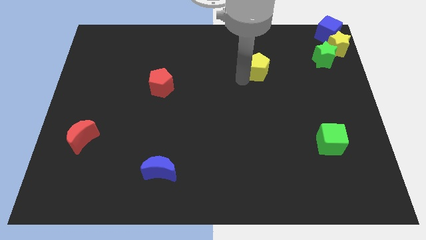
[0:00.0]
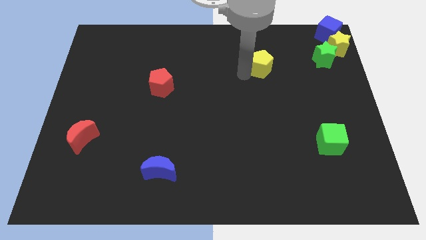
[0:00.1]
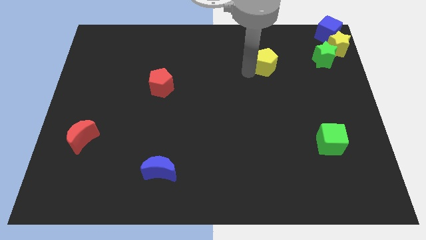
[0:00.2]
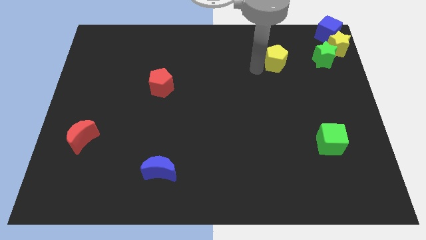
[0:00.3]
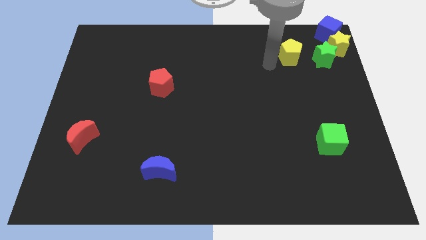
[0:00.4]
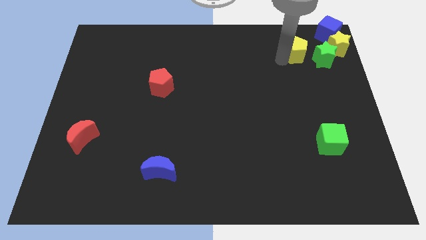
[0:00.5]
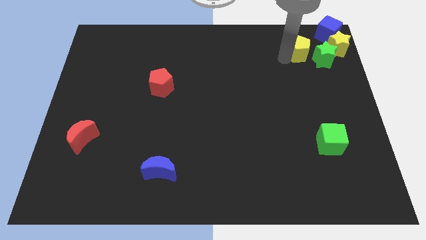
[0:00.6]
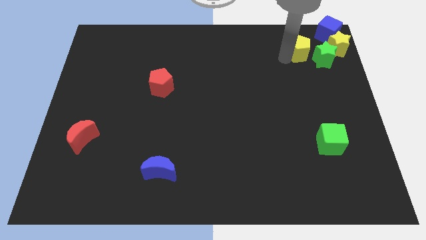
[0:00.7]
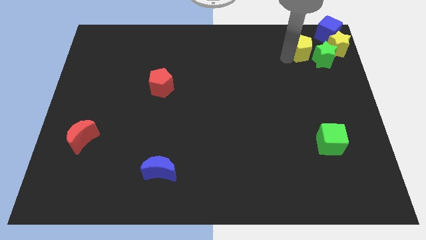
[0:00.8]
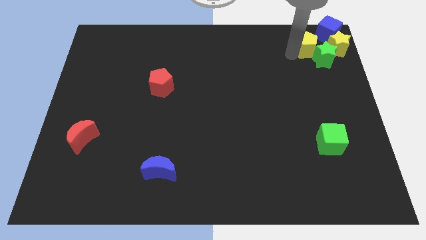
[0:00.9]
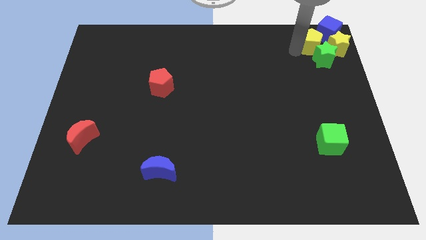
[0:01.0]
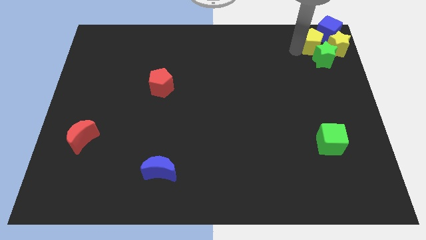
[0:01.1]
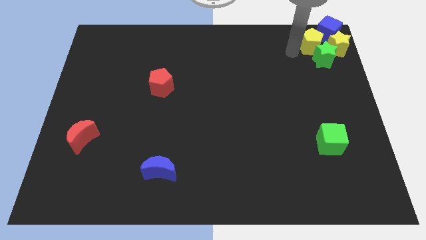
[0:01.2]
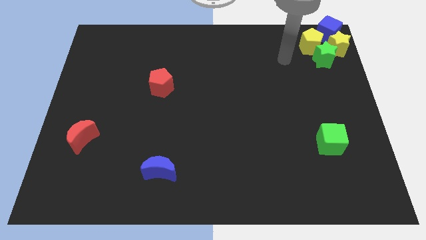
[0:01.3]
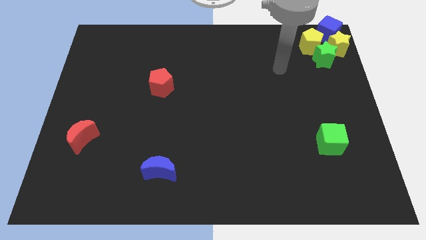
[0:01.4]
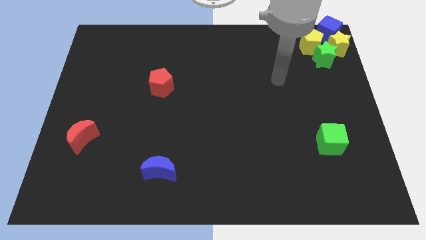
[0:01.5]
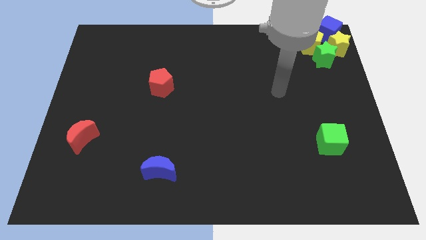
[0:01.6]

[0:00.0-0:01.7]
place the yellow pentagon above the green star

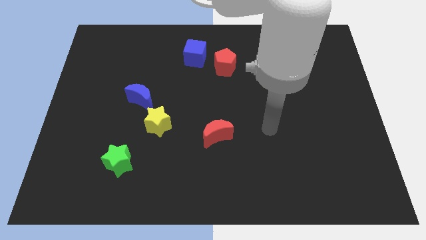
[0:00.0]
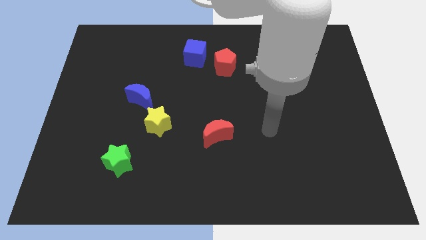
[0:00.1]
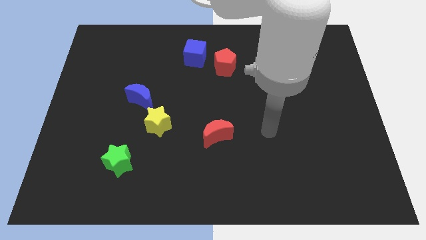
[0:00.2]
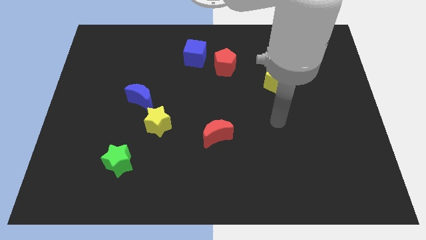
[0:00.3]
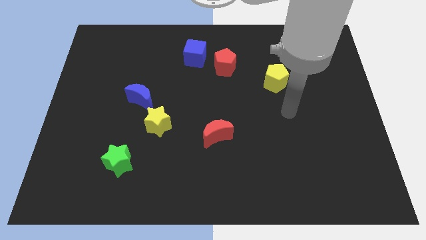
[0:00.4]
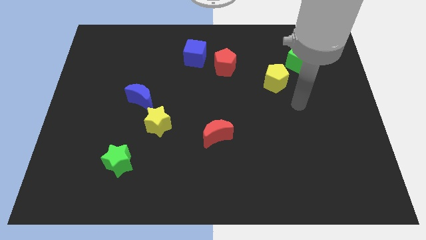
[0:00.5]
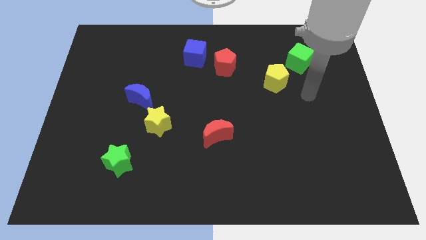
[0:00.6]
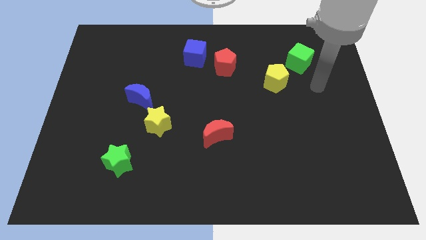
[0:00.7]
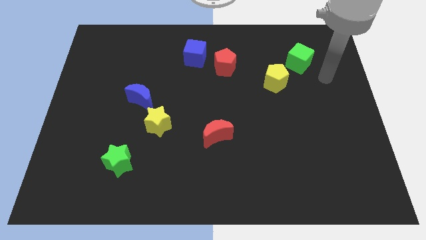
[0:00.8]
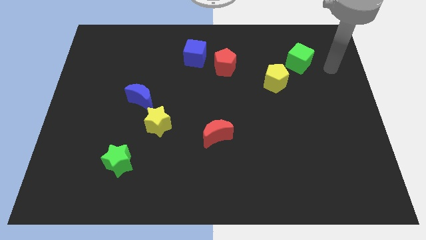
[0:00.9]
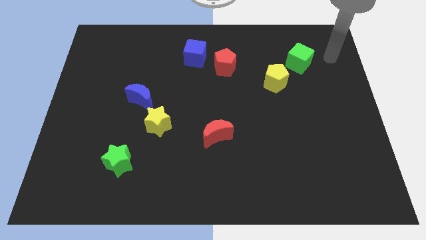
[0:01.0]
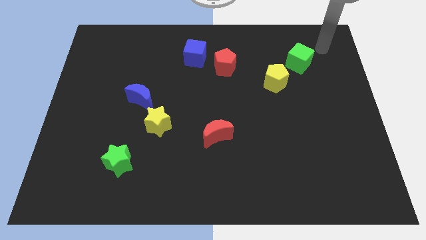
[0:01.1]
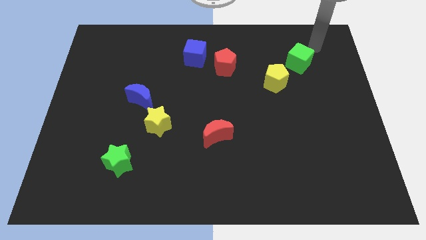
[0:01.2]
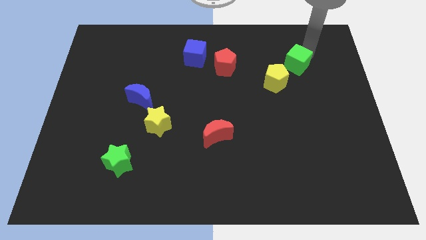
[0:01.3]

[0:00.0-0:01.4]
point your arm towards the top right side of the green cube

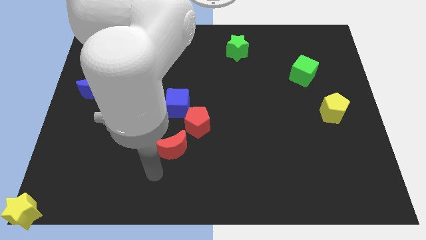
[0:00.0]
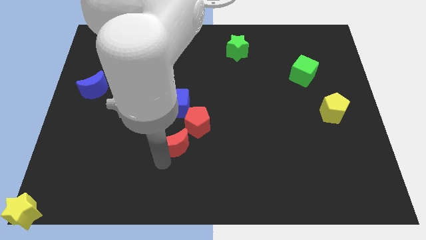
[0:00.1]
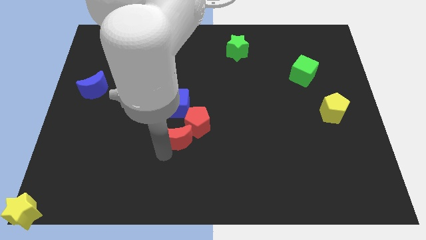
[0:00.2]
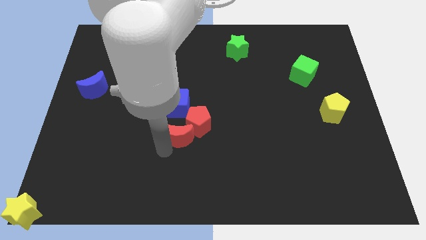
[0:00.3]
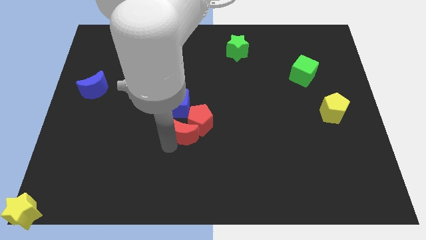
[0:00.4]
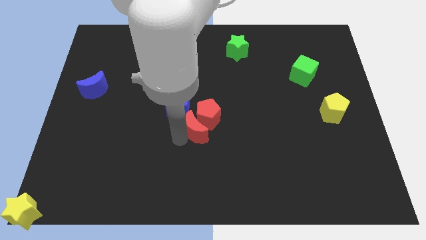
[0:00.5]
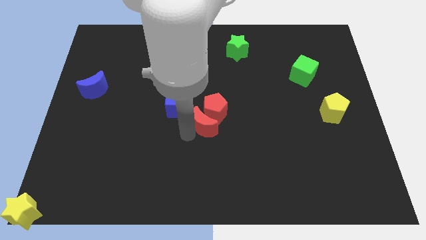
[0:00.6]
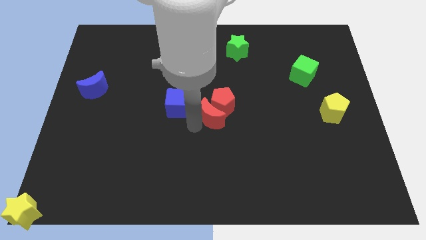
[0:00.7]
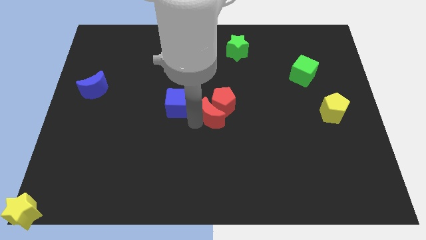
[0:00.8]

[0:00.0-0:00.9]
move red blocks slightly up

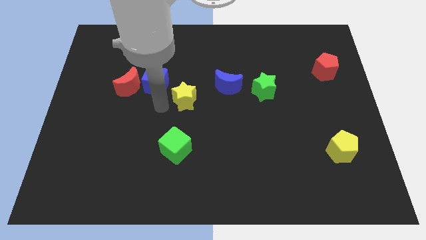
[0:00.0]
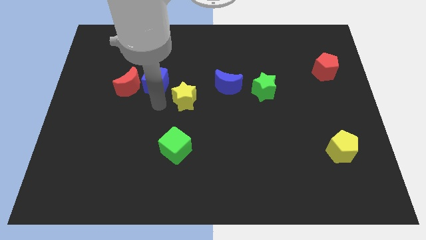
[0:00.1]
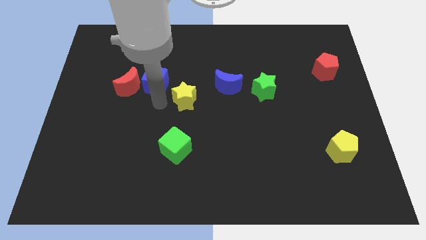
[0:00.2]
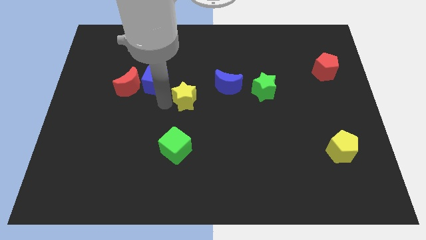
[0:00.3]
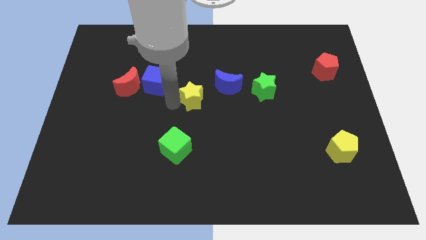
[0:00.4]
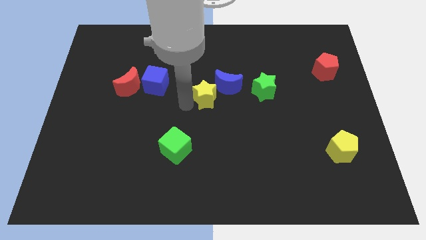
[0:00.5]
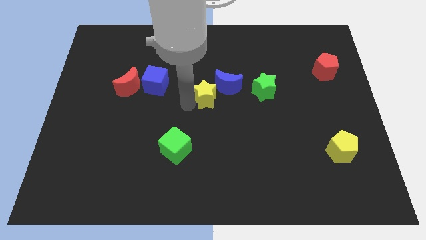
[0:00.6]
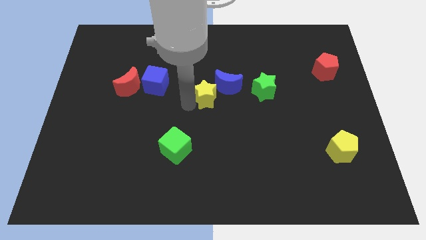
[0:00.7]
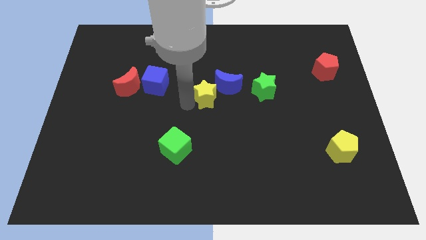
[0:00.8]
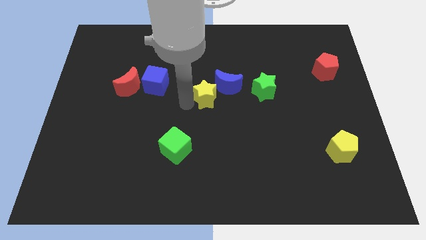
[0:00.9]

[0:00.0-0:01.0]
push the yellow star close to the blue crescent

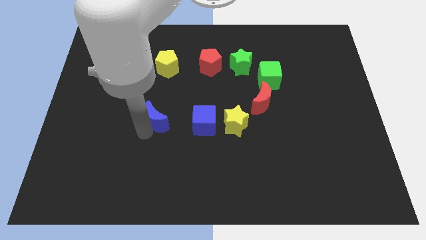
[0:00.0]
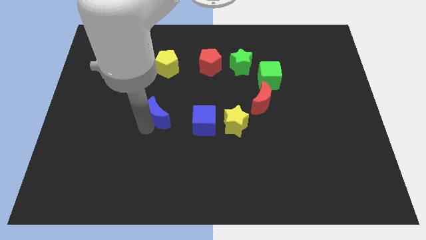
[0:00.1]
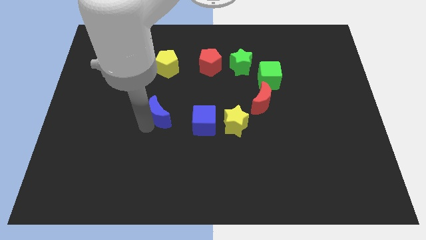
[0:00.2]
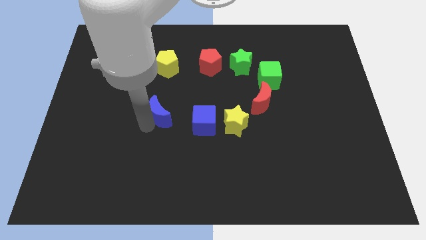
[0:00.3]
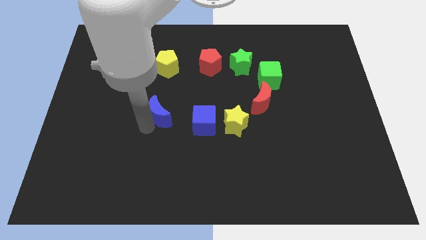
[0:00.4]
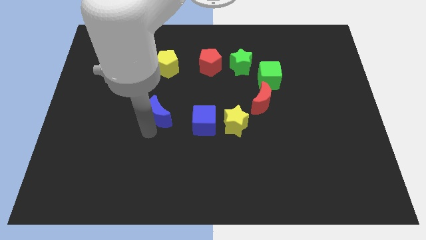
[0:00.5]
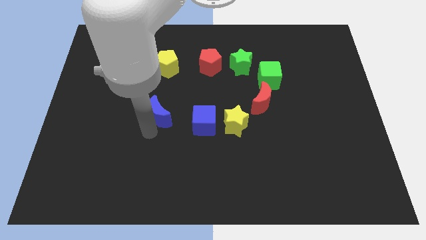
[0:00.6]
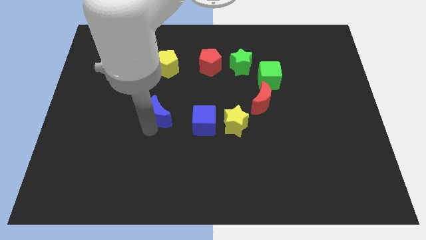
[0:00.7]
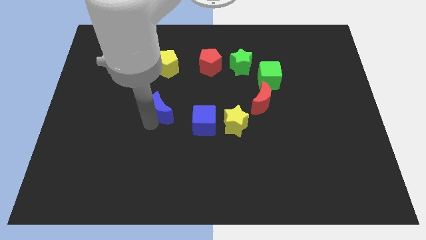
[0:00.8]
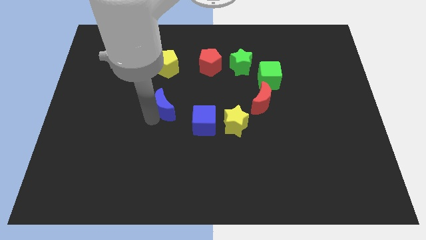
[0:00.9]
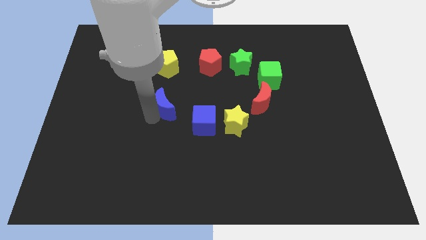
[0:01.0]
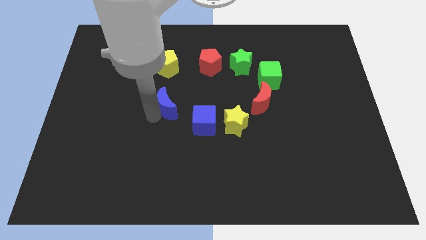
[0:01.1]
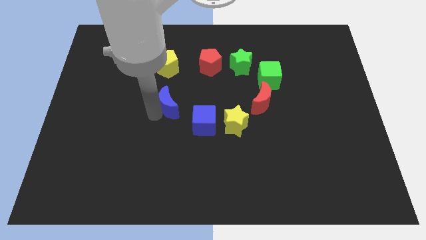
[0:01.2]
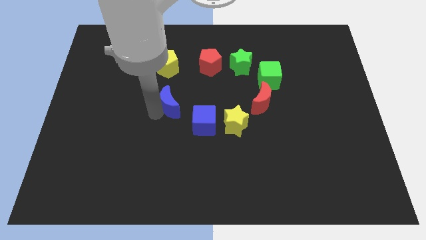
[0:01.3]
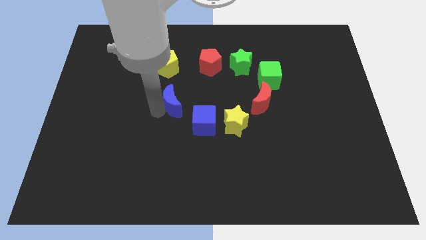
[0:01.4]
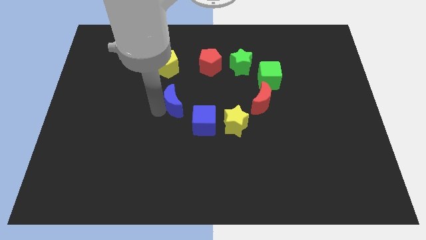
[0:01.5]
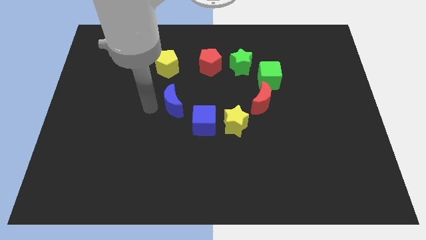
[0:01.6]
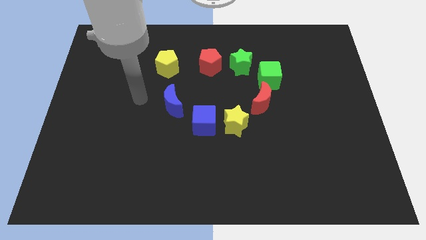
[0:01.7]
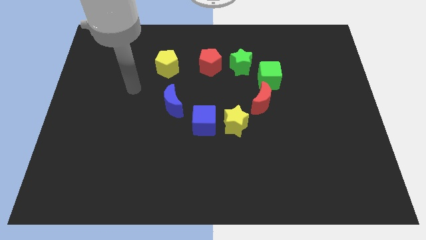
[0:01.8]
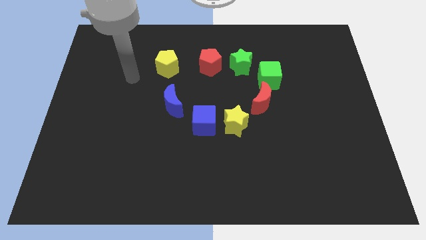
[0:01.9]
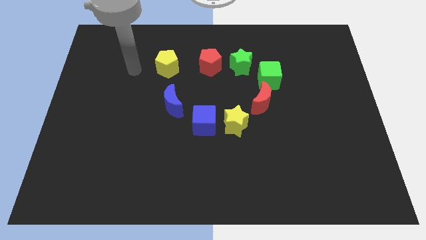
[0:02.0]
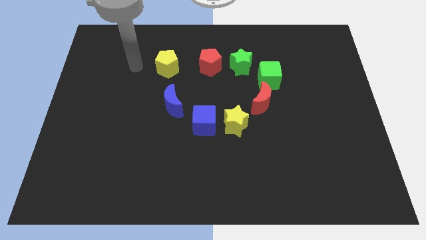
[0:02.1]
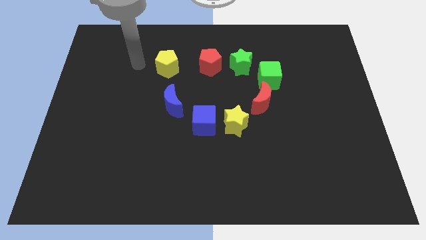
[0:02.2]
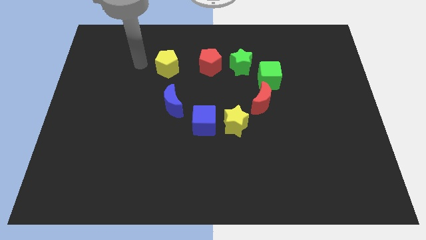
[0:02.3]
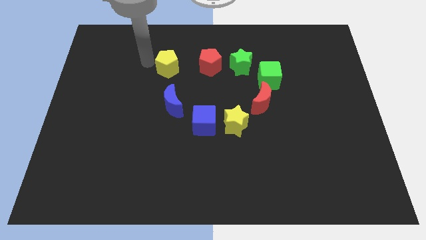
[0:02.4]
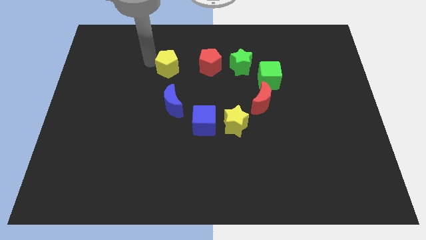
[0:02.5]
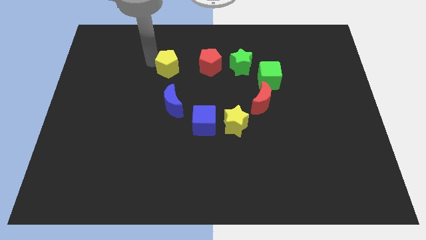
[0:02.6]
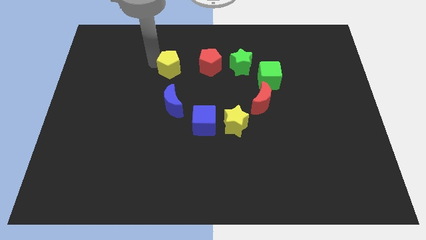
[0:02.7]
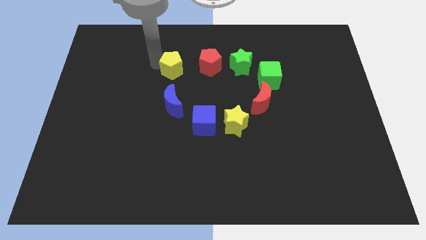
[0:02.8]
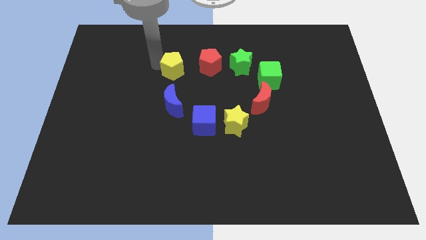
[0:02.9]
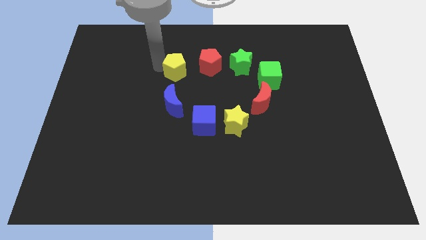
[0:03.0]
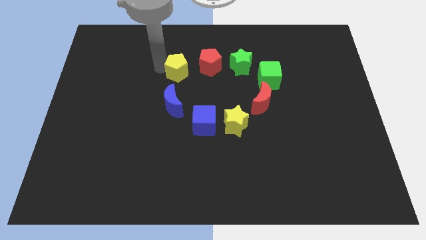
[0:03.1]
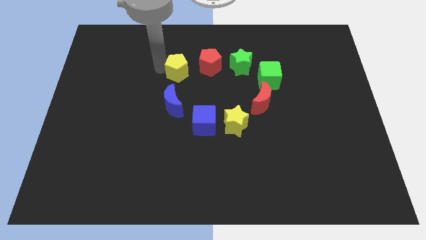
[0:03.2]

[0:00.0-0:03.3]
move yellow pentagon slightly towards right

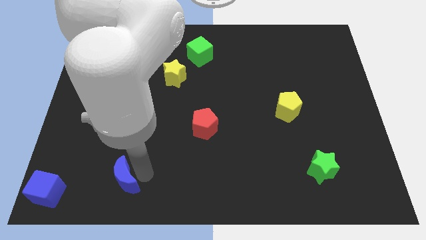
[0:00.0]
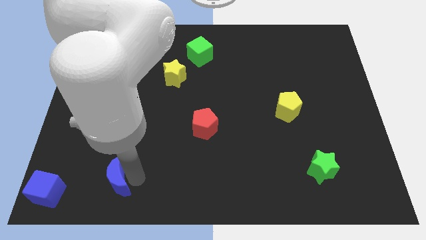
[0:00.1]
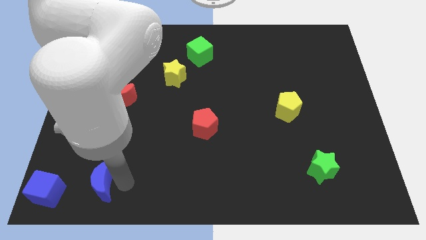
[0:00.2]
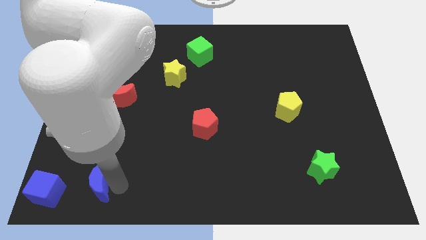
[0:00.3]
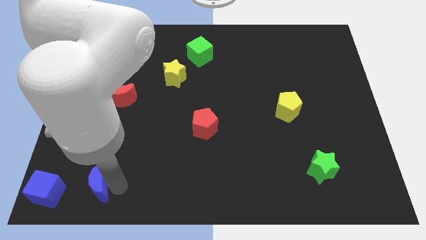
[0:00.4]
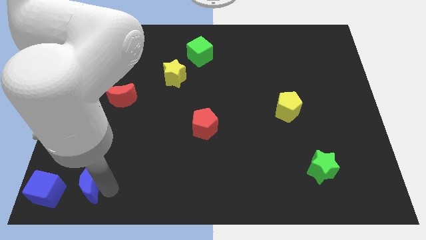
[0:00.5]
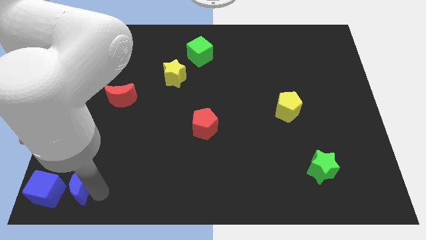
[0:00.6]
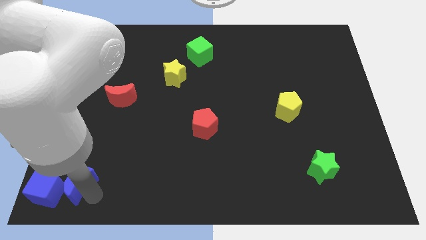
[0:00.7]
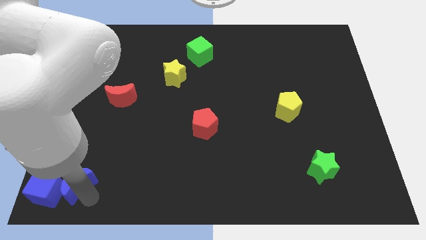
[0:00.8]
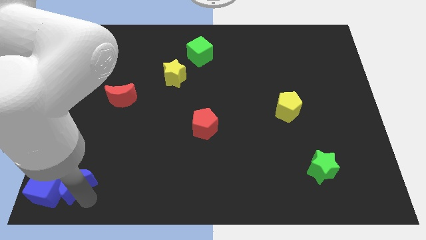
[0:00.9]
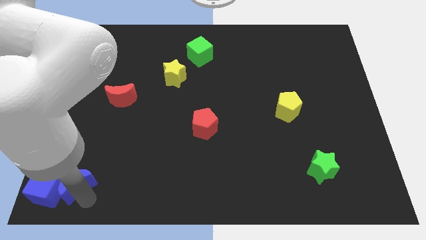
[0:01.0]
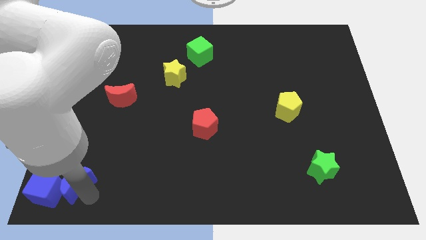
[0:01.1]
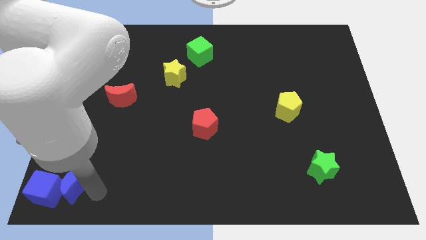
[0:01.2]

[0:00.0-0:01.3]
push the blue crescent to the right of the blue cube
